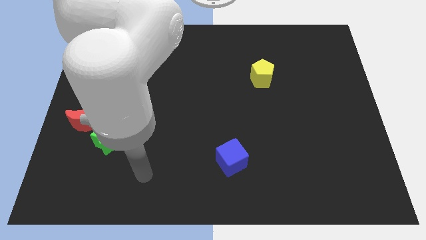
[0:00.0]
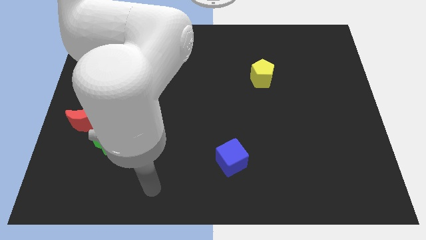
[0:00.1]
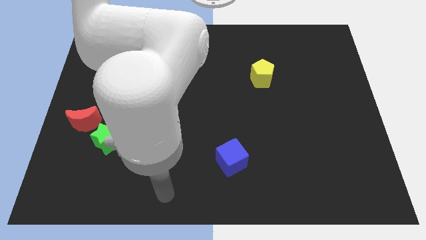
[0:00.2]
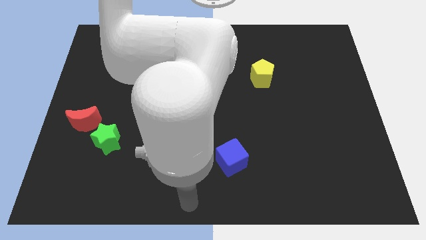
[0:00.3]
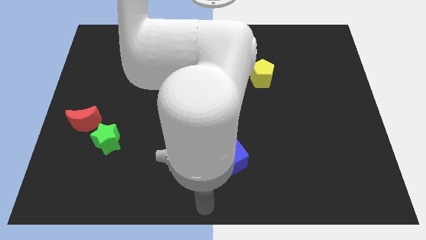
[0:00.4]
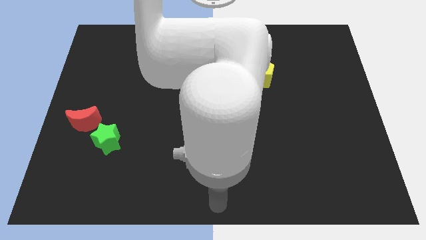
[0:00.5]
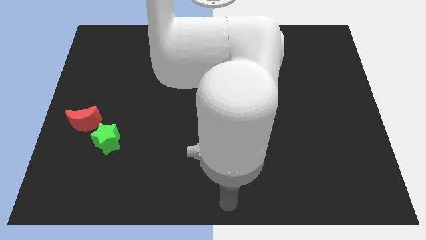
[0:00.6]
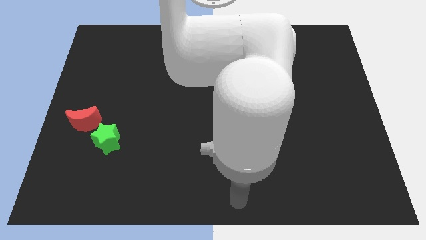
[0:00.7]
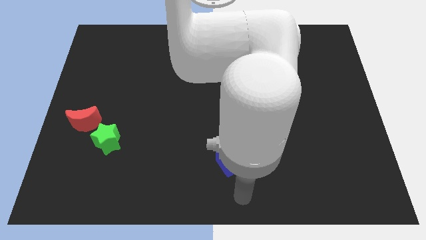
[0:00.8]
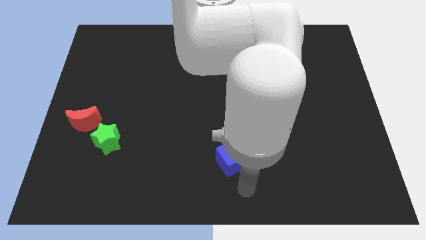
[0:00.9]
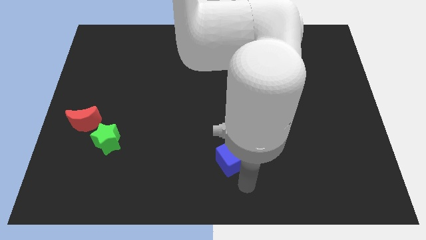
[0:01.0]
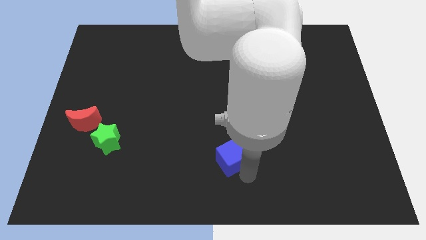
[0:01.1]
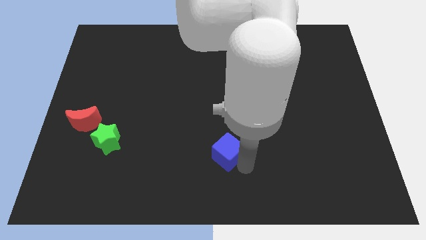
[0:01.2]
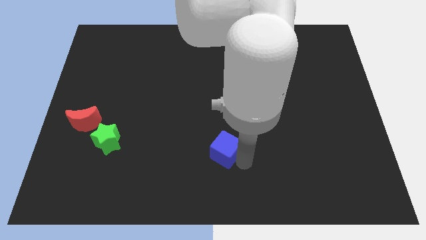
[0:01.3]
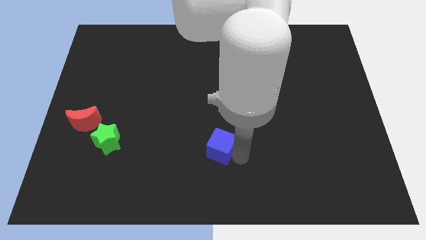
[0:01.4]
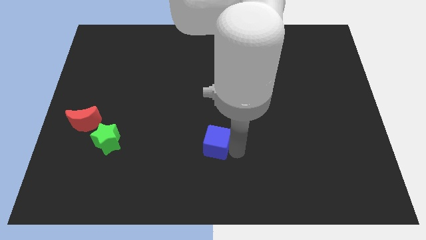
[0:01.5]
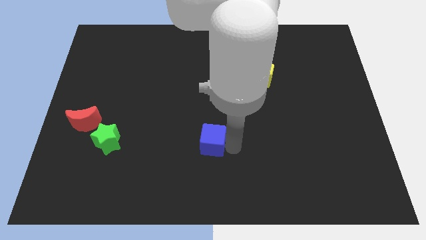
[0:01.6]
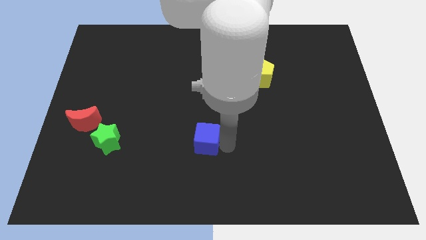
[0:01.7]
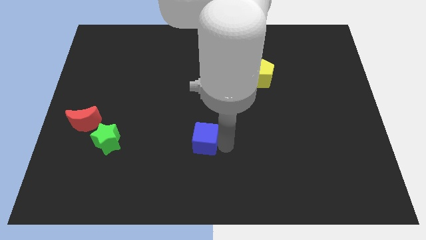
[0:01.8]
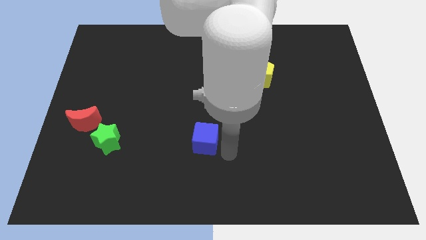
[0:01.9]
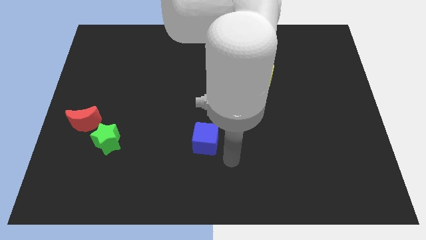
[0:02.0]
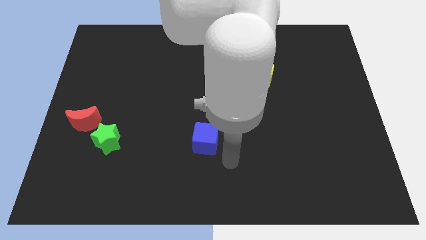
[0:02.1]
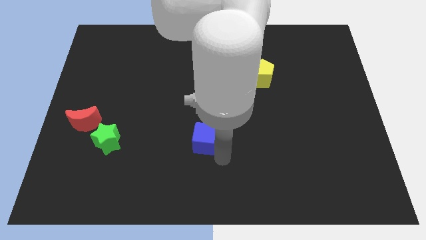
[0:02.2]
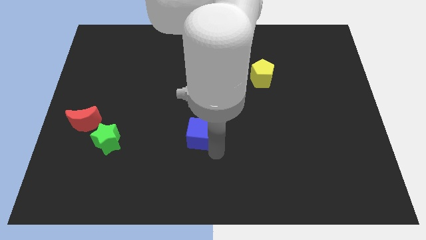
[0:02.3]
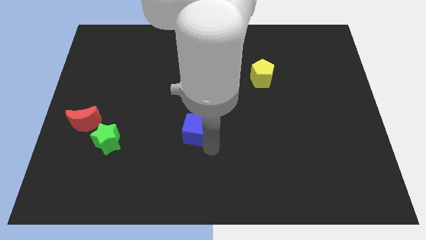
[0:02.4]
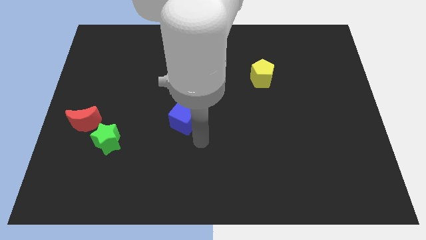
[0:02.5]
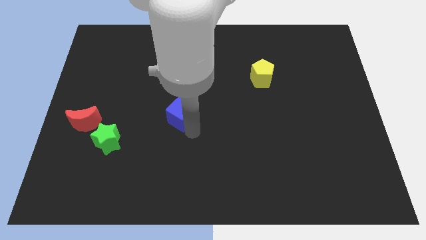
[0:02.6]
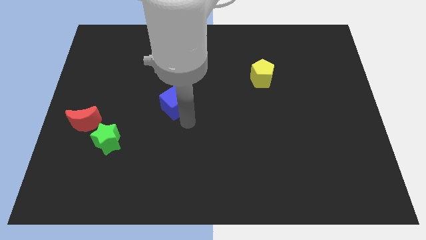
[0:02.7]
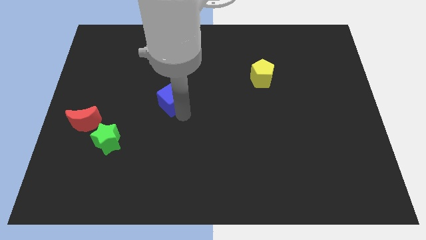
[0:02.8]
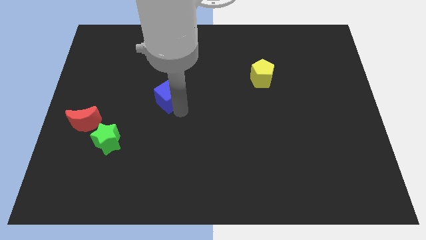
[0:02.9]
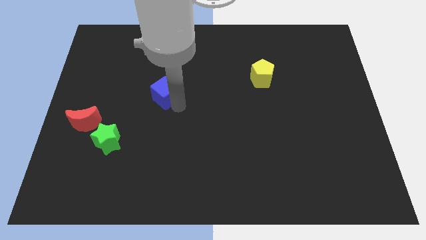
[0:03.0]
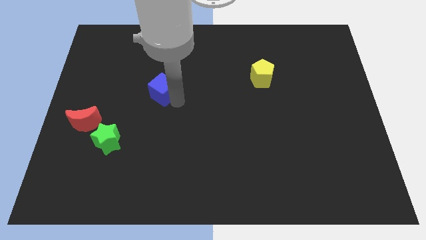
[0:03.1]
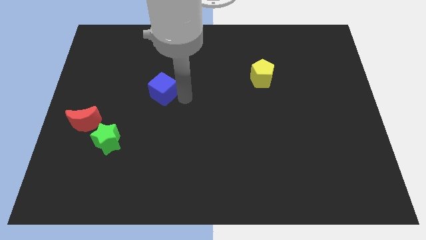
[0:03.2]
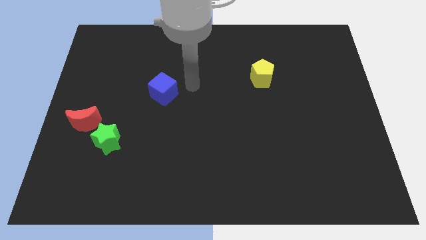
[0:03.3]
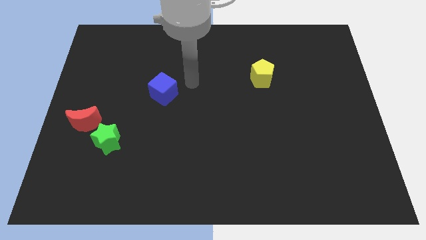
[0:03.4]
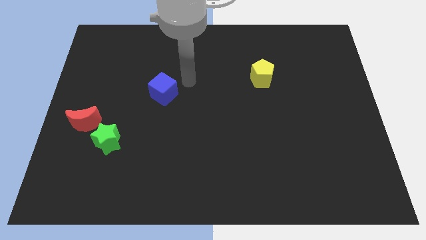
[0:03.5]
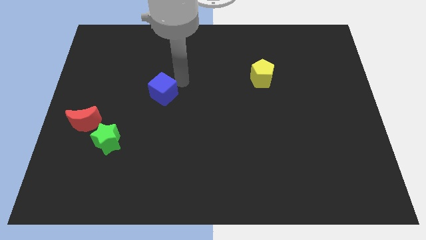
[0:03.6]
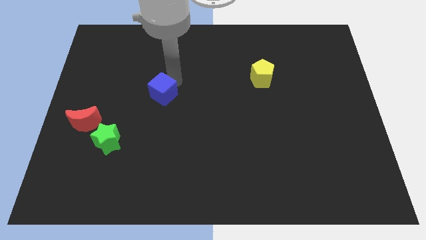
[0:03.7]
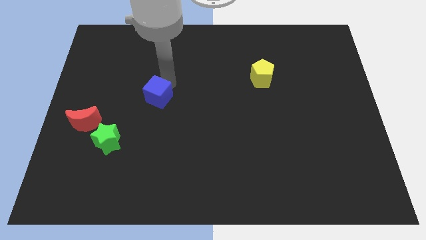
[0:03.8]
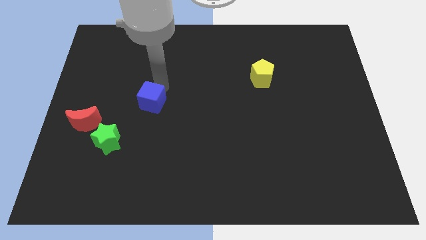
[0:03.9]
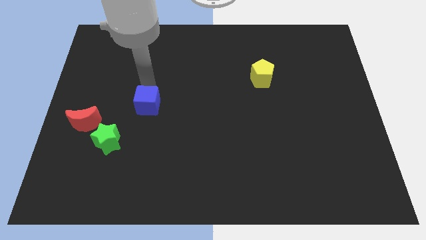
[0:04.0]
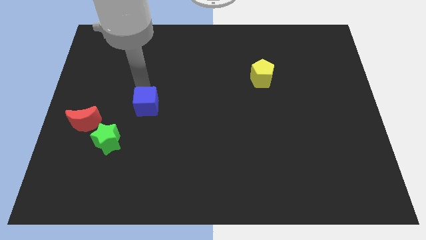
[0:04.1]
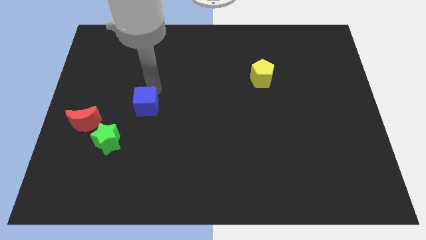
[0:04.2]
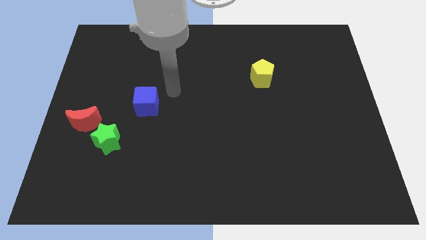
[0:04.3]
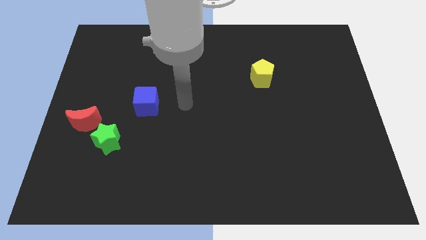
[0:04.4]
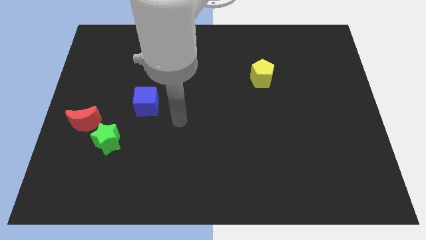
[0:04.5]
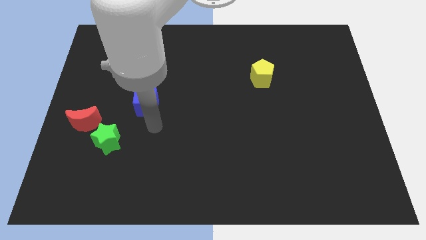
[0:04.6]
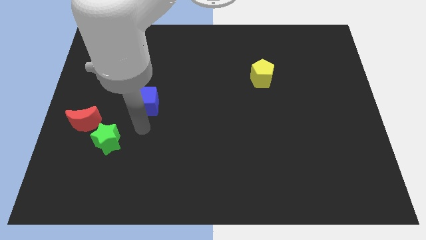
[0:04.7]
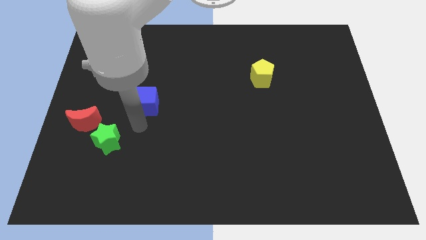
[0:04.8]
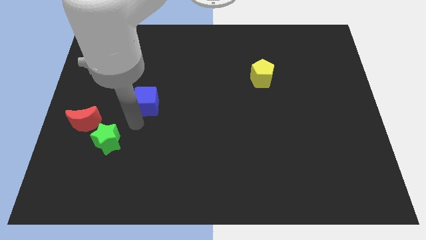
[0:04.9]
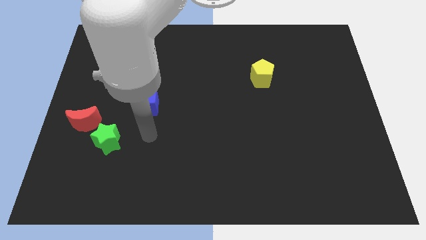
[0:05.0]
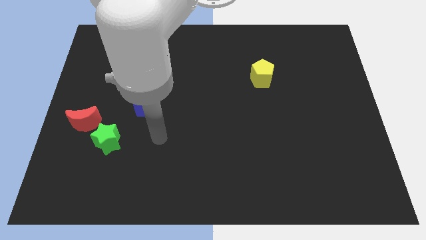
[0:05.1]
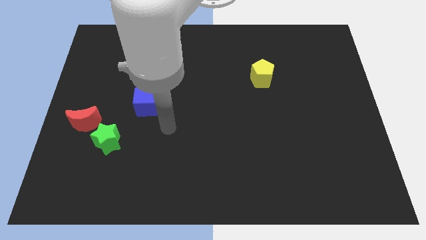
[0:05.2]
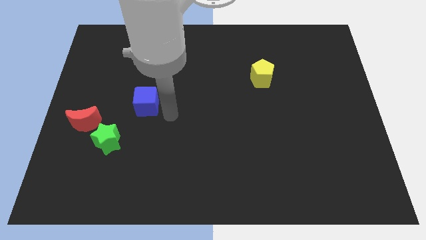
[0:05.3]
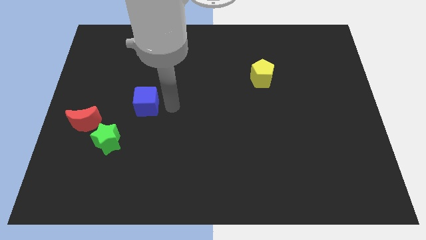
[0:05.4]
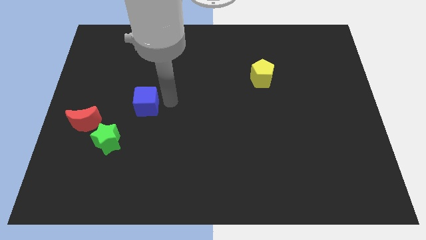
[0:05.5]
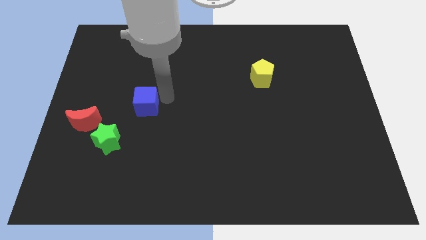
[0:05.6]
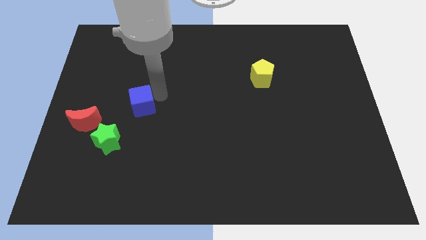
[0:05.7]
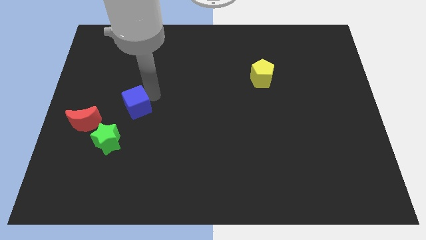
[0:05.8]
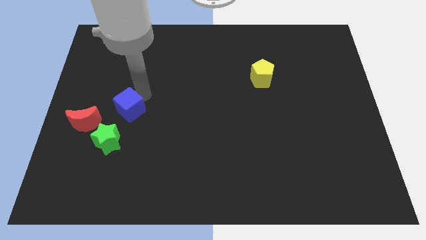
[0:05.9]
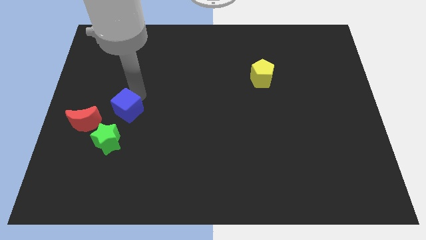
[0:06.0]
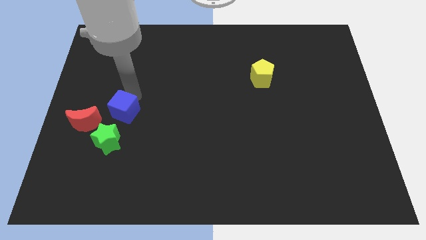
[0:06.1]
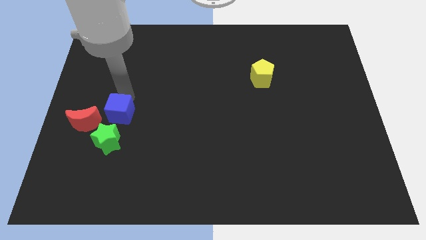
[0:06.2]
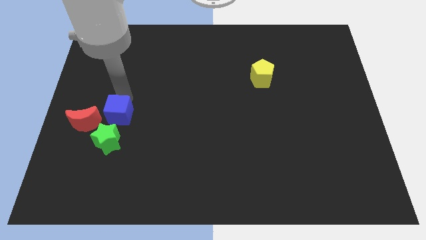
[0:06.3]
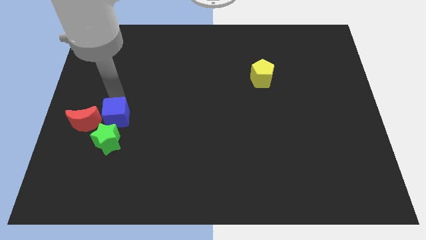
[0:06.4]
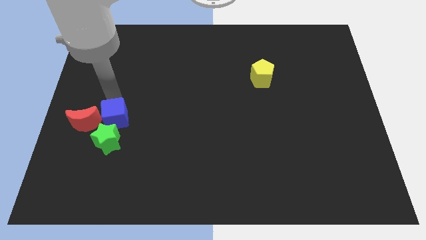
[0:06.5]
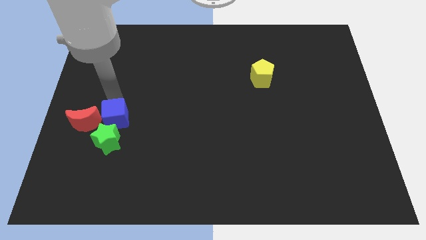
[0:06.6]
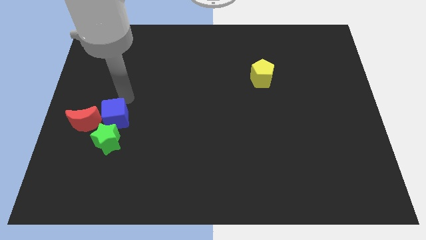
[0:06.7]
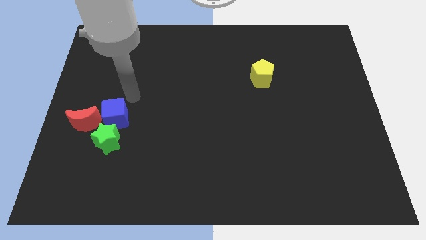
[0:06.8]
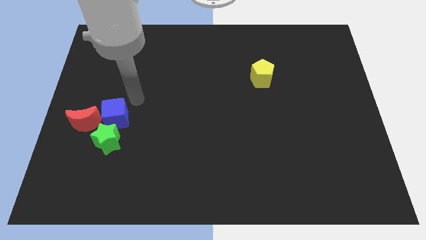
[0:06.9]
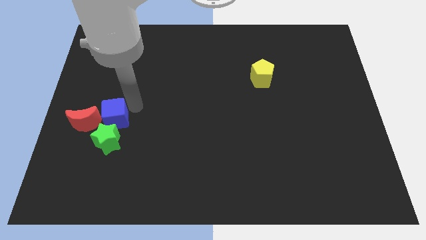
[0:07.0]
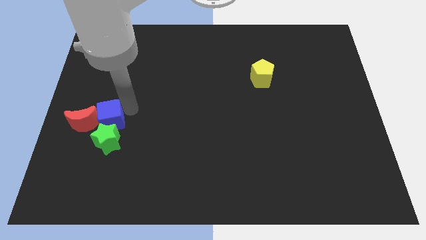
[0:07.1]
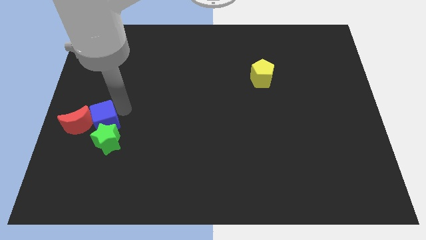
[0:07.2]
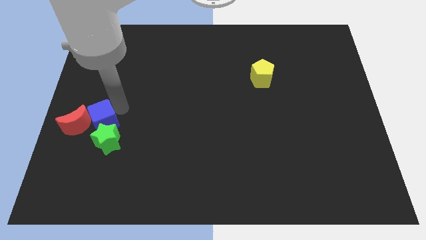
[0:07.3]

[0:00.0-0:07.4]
push the blue cube to the moon

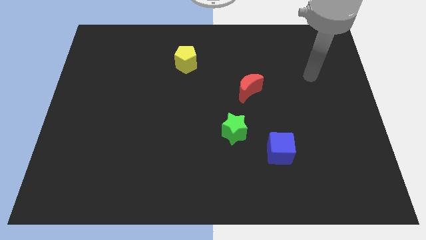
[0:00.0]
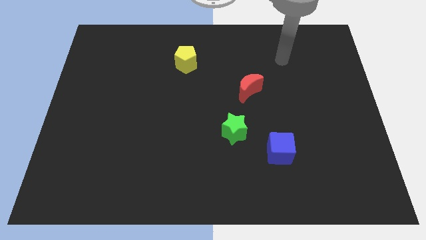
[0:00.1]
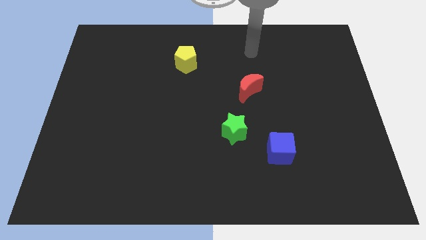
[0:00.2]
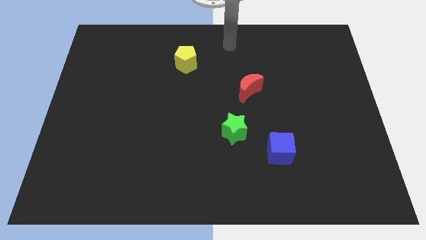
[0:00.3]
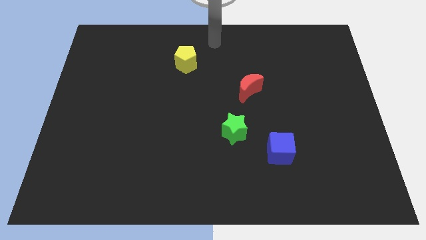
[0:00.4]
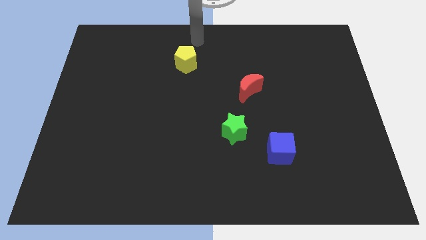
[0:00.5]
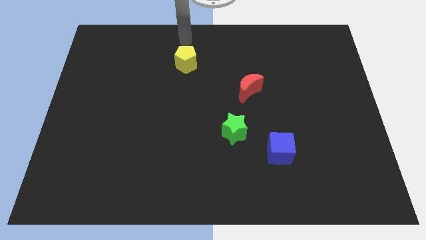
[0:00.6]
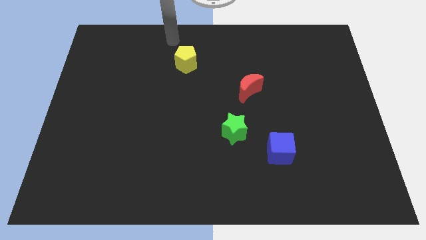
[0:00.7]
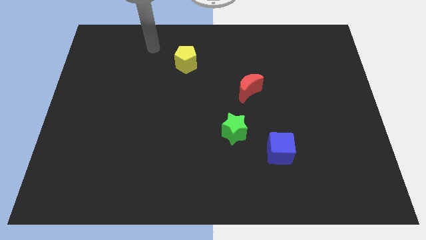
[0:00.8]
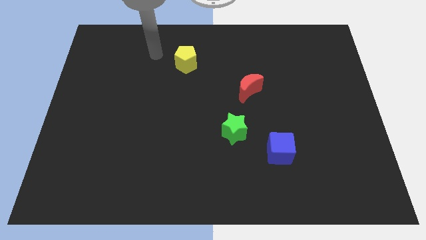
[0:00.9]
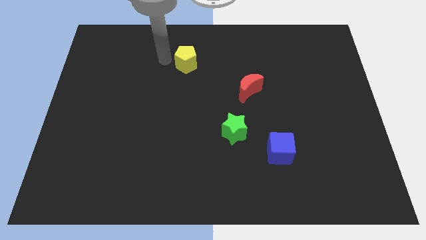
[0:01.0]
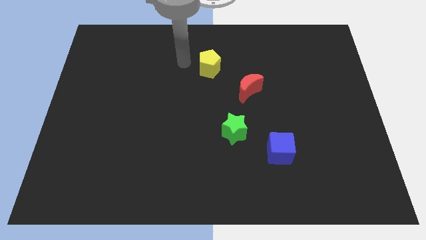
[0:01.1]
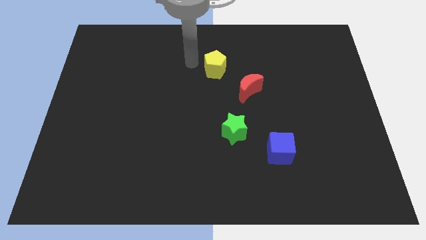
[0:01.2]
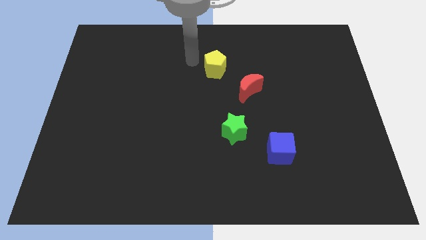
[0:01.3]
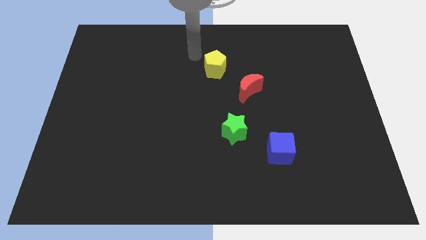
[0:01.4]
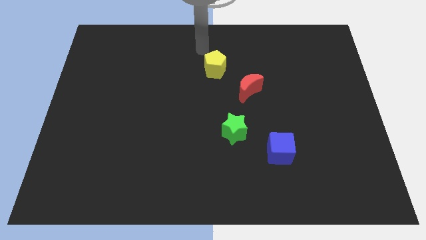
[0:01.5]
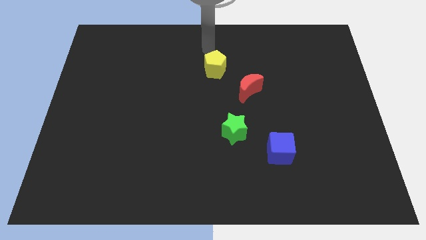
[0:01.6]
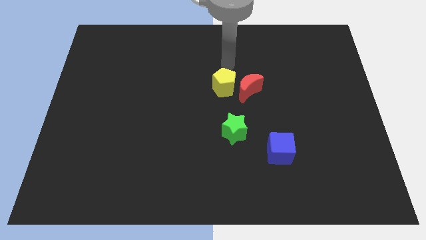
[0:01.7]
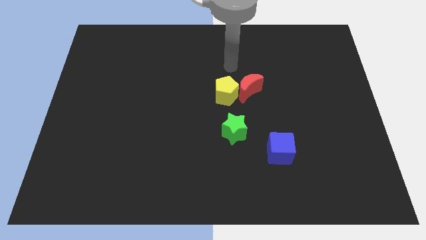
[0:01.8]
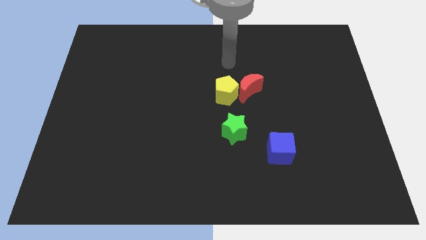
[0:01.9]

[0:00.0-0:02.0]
put the yellow pentagon towards the red moon
